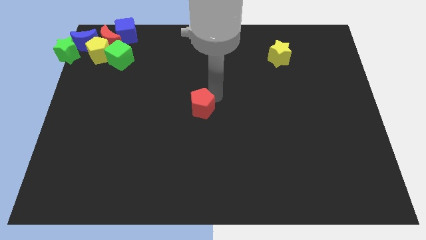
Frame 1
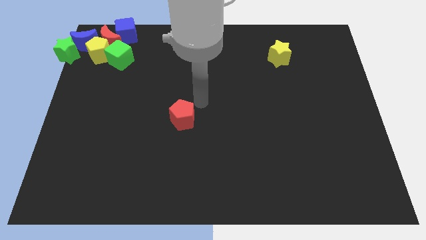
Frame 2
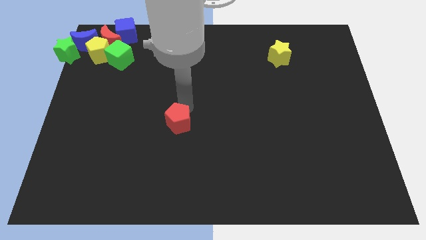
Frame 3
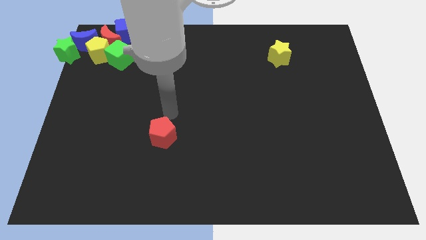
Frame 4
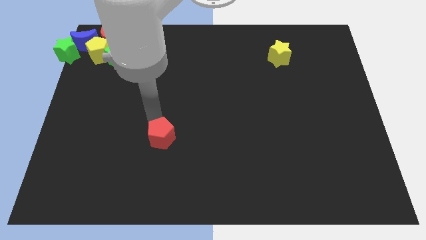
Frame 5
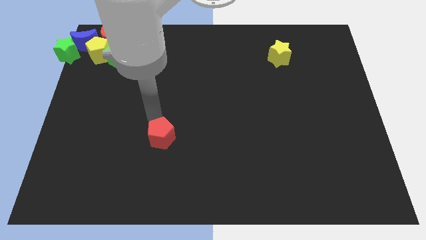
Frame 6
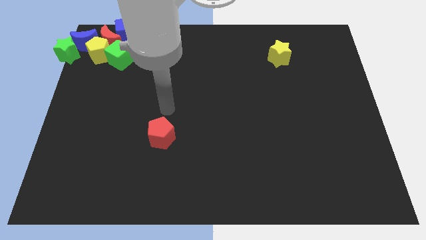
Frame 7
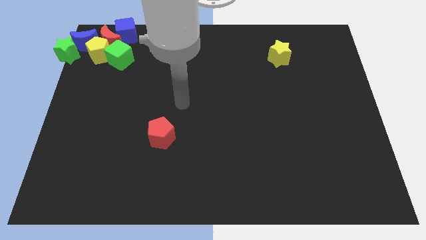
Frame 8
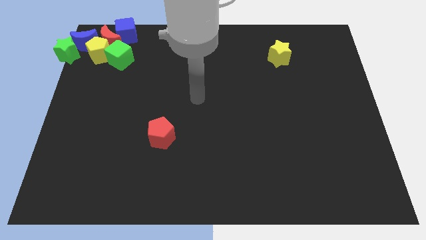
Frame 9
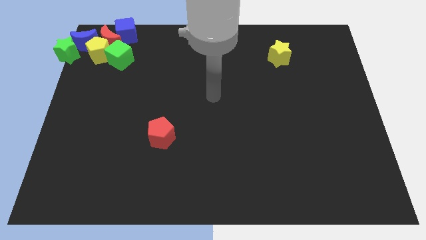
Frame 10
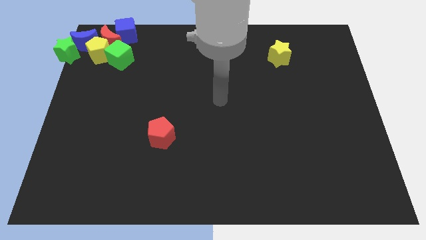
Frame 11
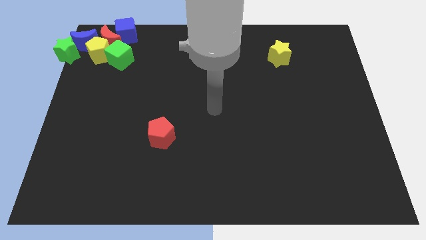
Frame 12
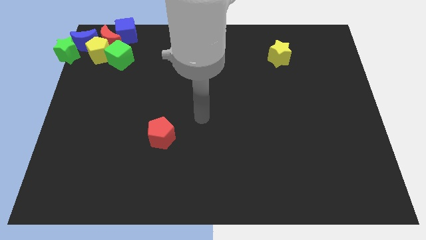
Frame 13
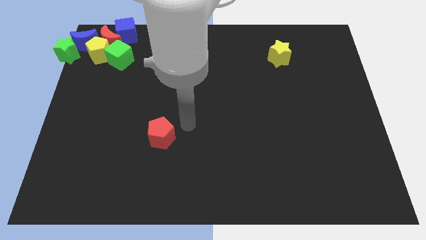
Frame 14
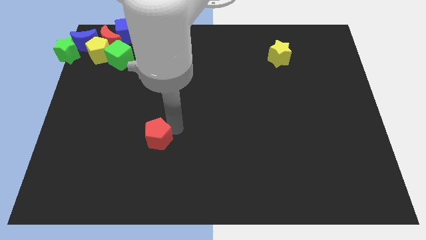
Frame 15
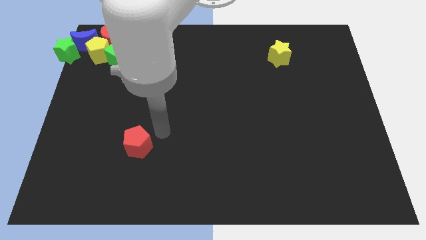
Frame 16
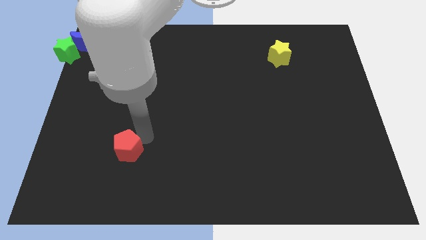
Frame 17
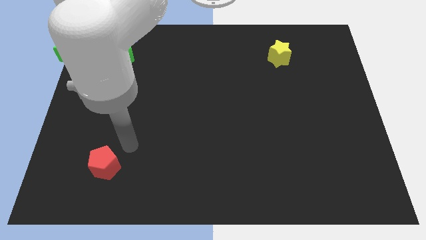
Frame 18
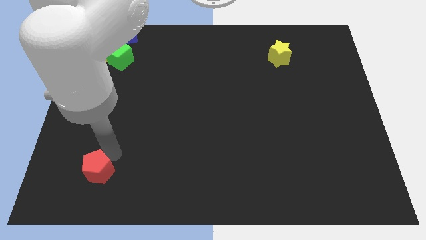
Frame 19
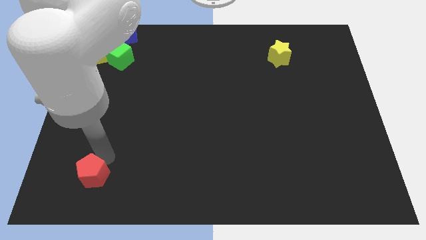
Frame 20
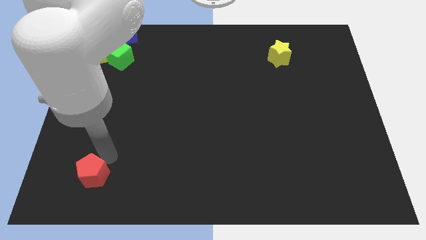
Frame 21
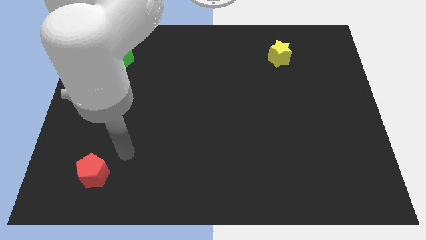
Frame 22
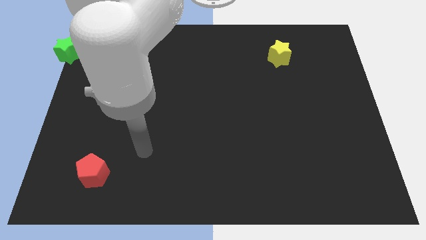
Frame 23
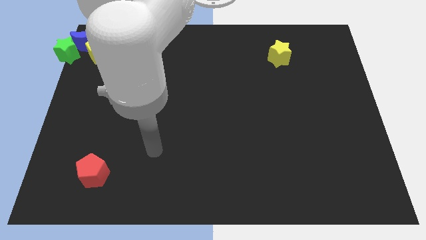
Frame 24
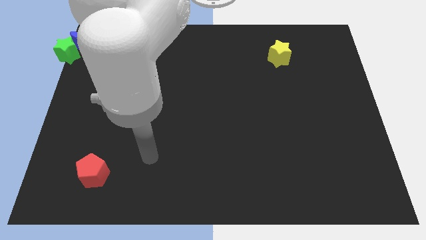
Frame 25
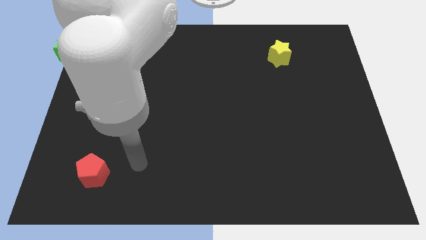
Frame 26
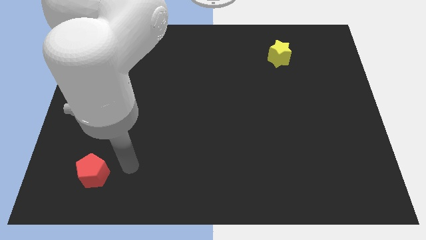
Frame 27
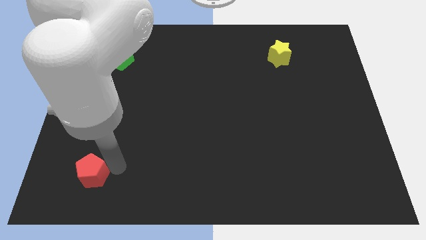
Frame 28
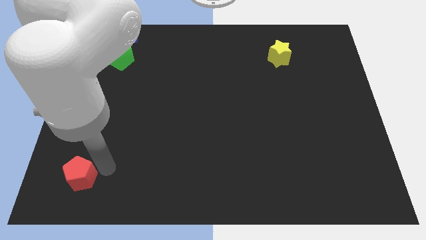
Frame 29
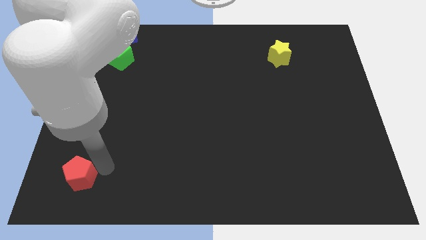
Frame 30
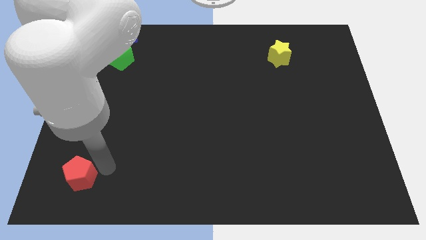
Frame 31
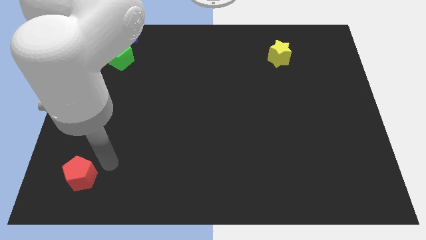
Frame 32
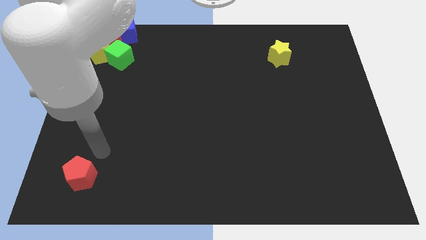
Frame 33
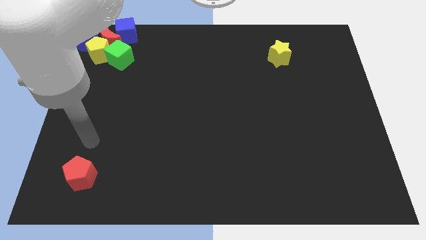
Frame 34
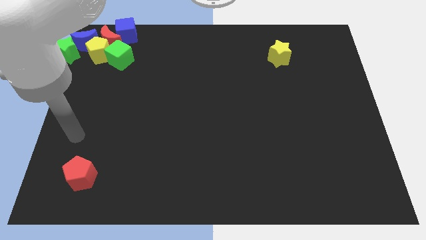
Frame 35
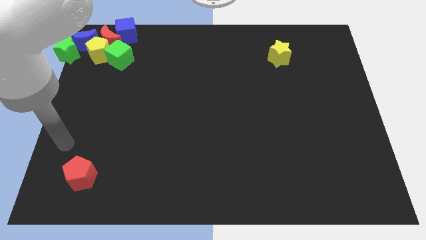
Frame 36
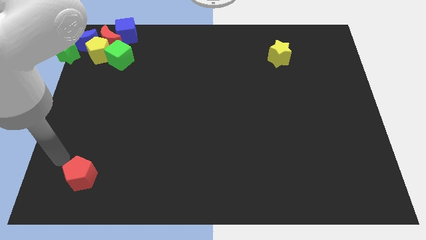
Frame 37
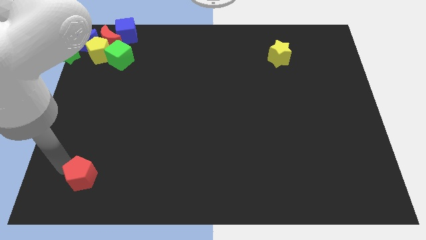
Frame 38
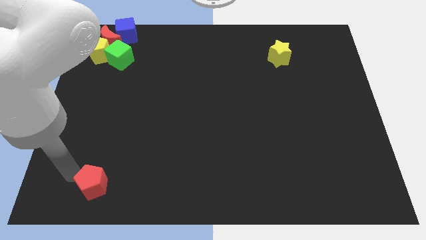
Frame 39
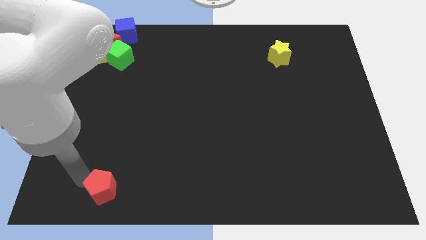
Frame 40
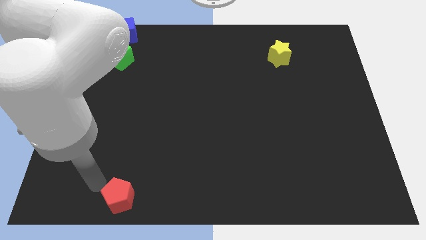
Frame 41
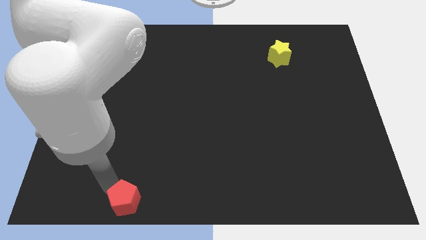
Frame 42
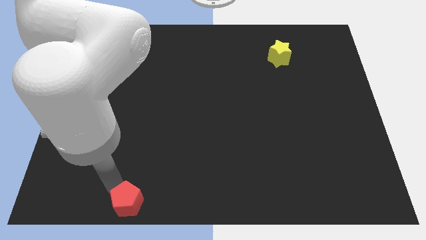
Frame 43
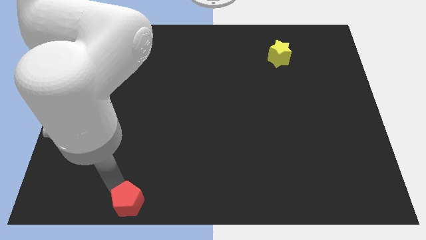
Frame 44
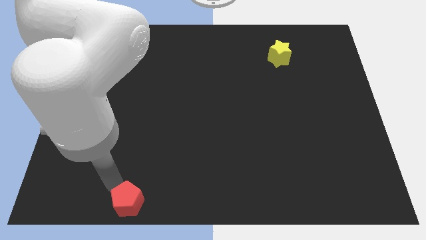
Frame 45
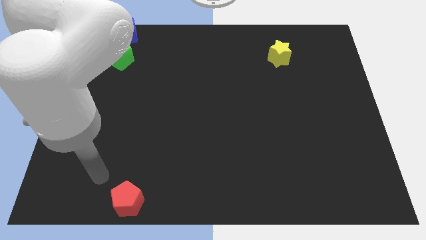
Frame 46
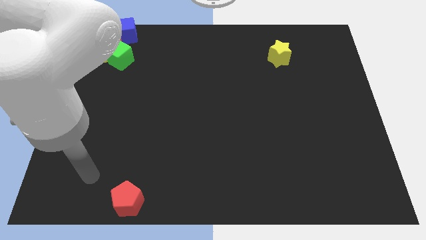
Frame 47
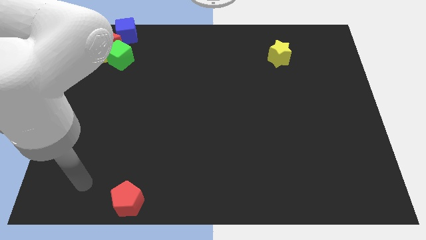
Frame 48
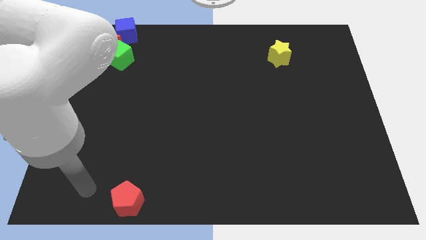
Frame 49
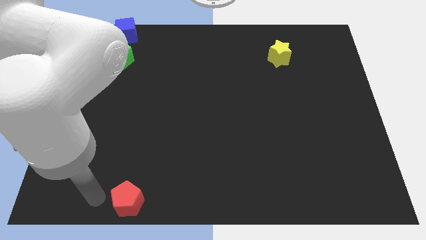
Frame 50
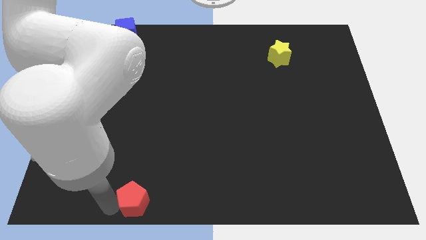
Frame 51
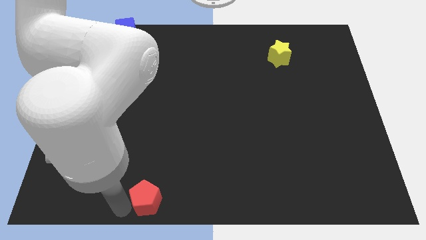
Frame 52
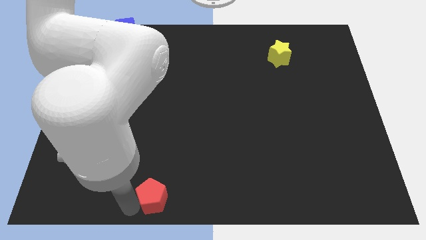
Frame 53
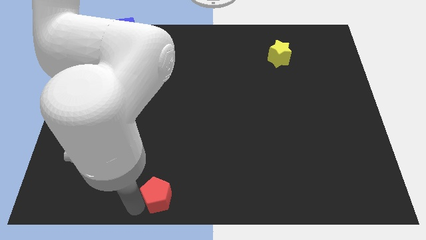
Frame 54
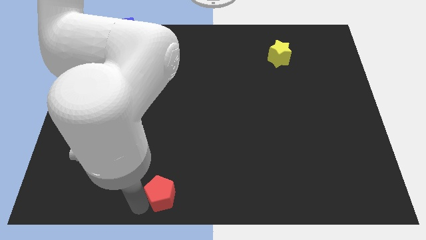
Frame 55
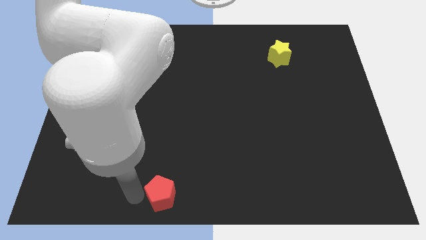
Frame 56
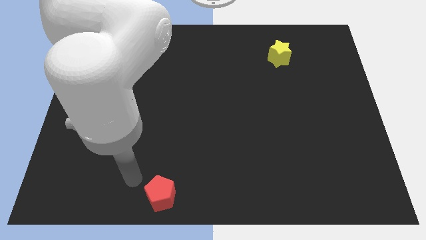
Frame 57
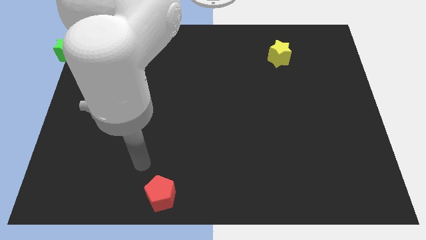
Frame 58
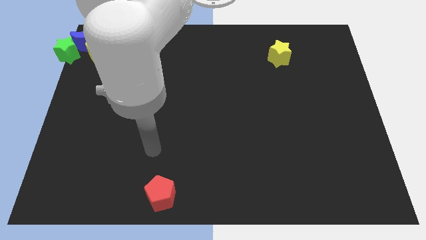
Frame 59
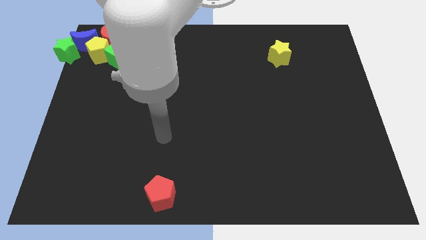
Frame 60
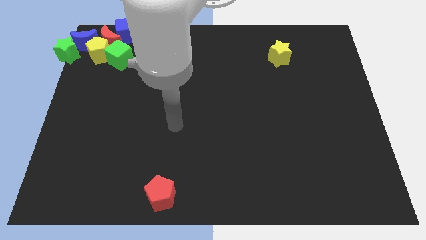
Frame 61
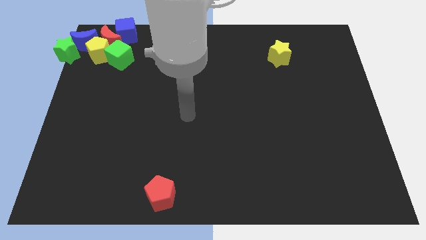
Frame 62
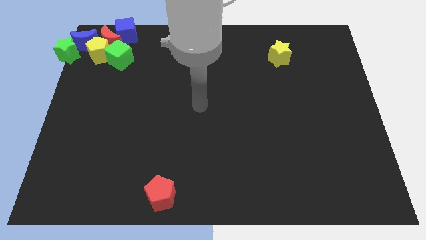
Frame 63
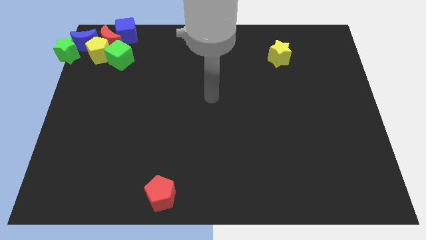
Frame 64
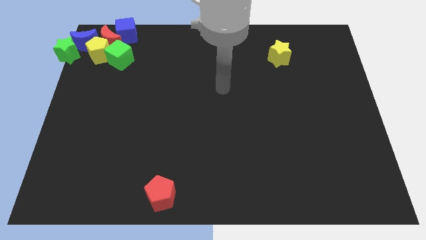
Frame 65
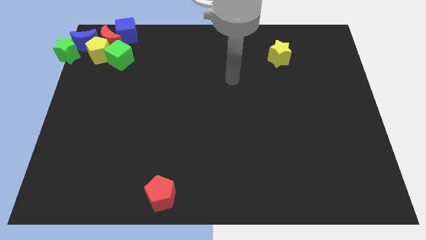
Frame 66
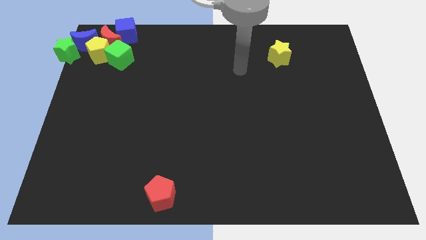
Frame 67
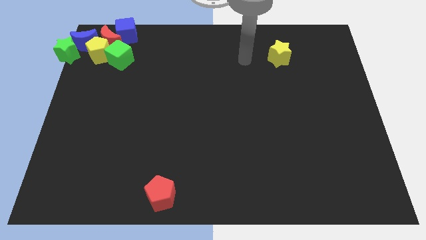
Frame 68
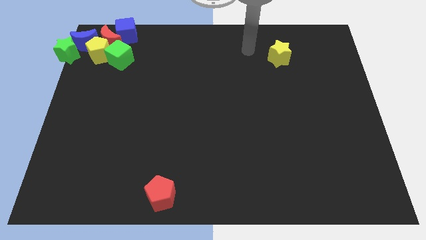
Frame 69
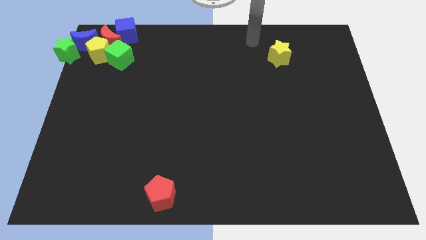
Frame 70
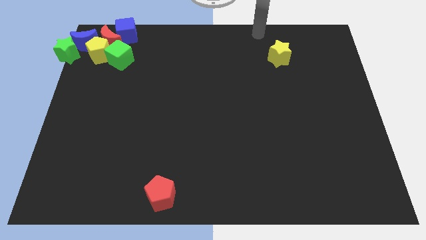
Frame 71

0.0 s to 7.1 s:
push the red pentagon towards the bottom of the board

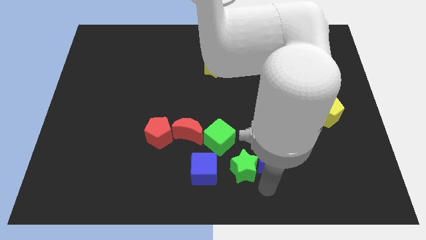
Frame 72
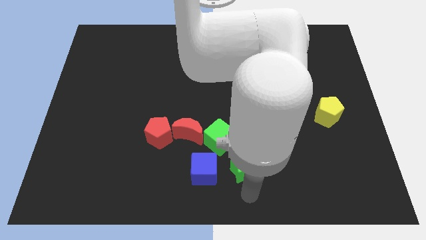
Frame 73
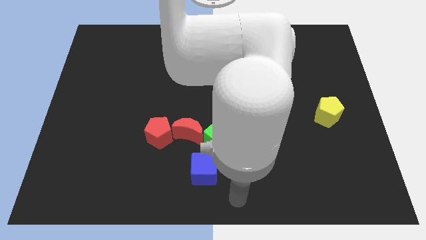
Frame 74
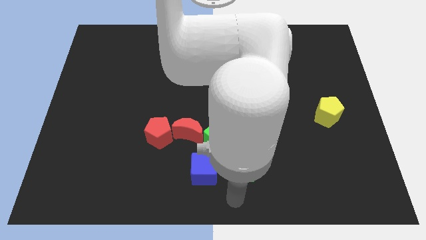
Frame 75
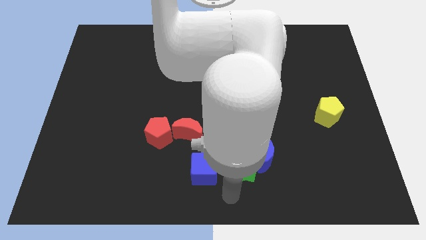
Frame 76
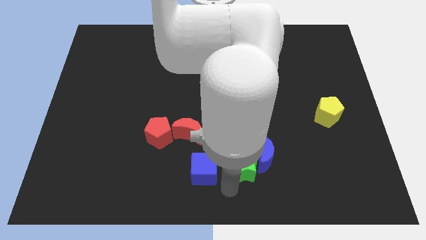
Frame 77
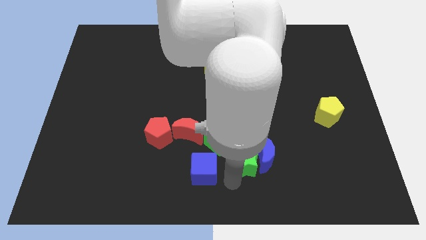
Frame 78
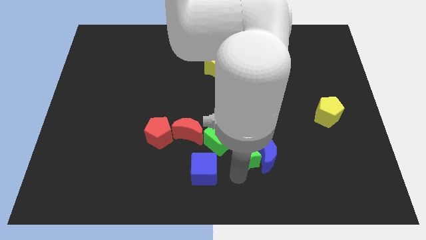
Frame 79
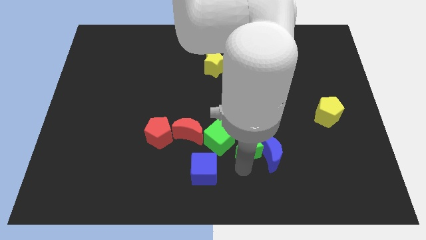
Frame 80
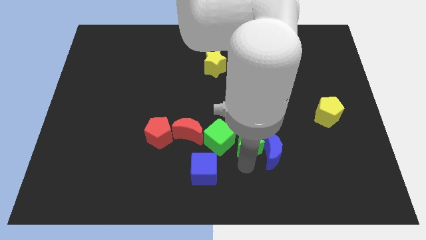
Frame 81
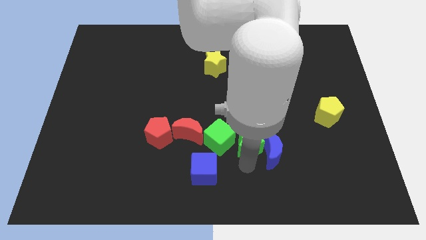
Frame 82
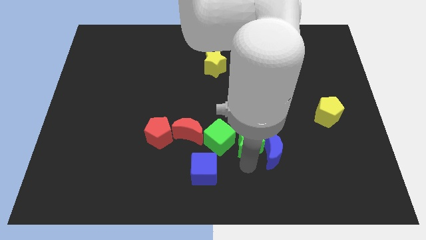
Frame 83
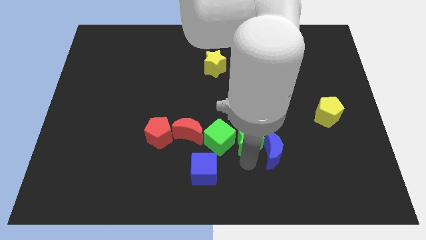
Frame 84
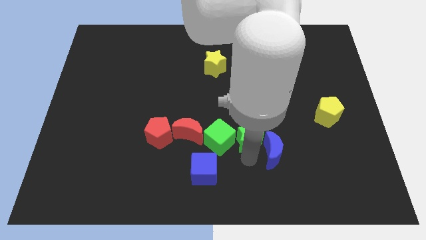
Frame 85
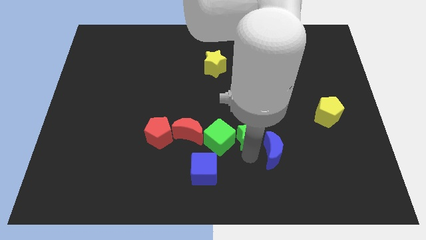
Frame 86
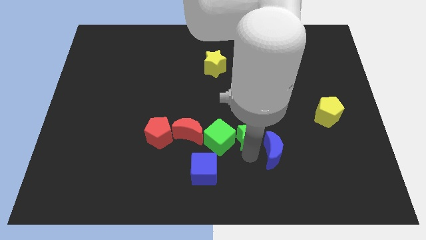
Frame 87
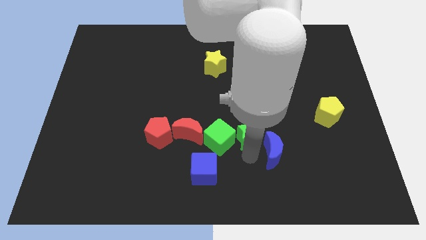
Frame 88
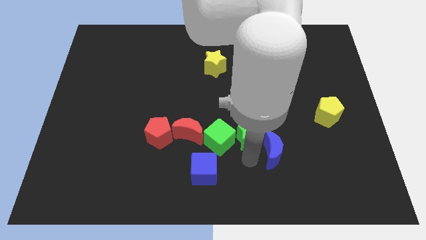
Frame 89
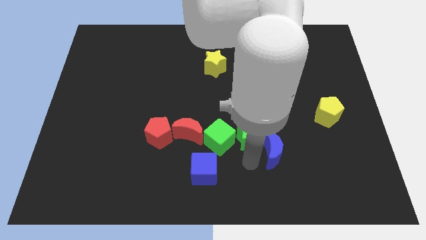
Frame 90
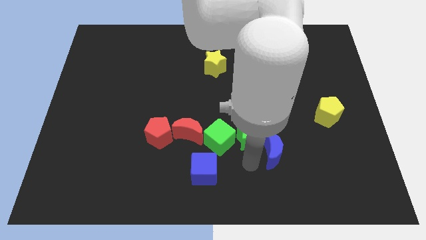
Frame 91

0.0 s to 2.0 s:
move the green star slightly upwards to make a line of blocks

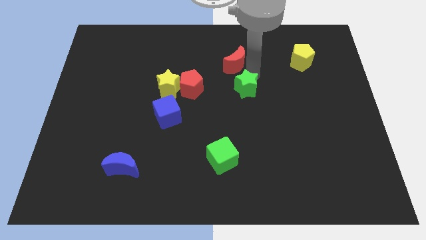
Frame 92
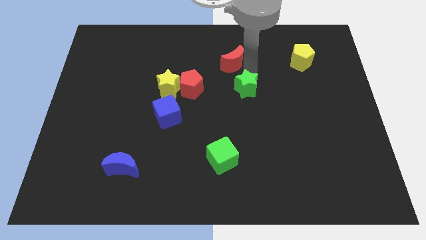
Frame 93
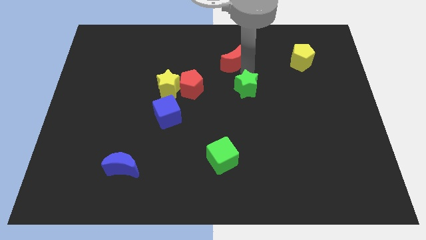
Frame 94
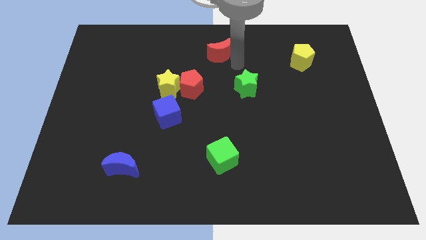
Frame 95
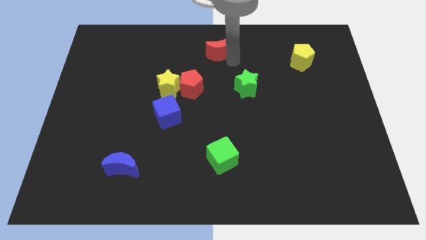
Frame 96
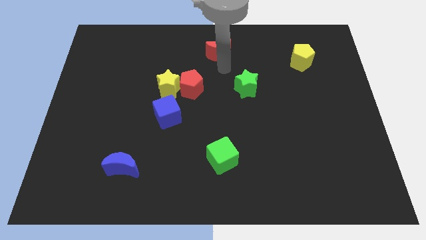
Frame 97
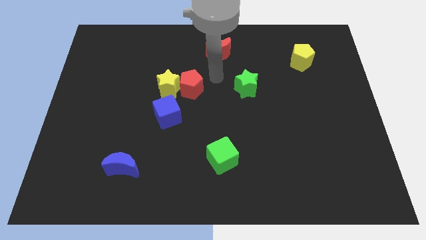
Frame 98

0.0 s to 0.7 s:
push the red crescent to the left of the yellow pentagon
